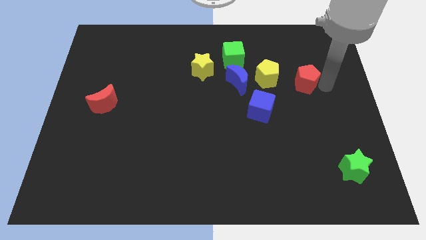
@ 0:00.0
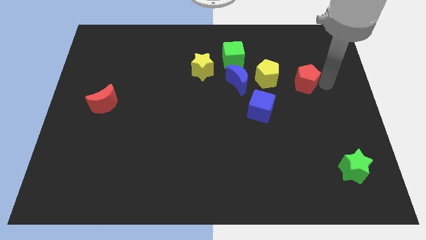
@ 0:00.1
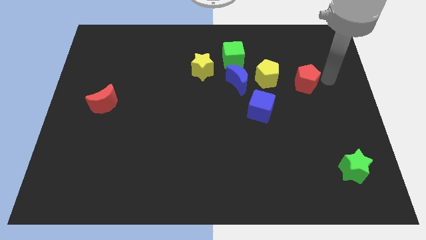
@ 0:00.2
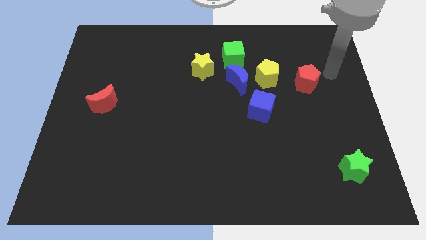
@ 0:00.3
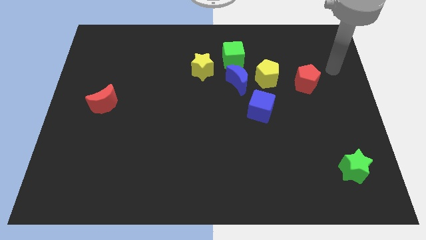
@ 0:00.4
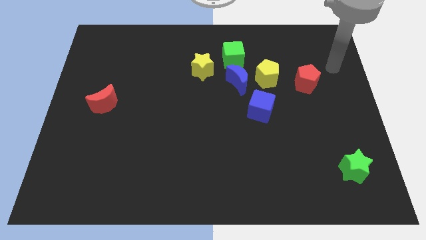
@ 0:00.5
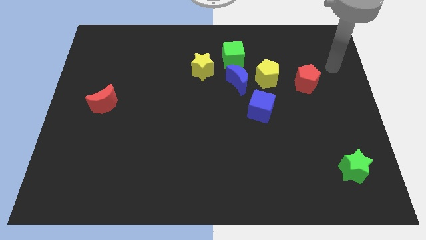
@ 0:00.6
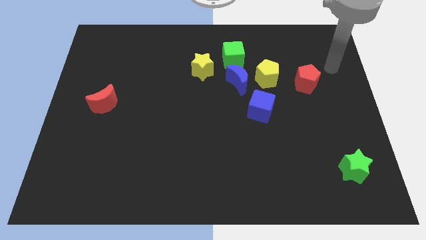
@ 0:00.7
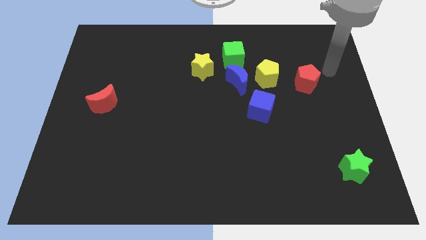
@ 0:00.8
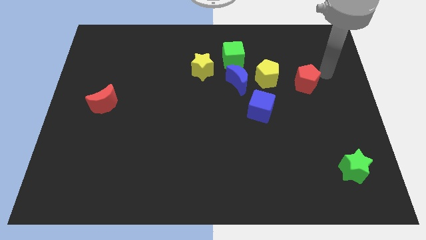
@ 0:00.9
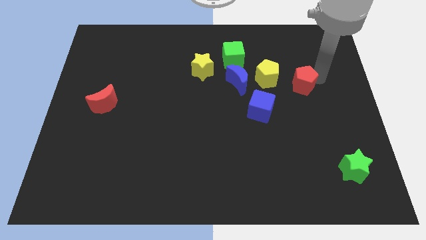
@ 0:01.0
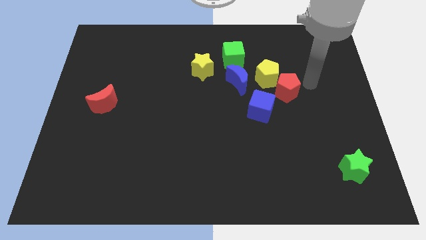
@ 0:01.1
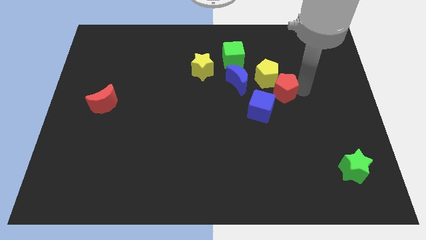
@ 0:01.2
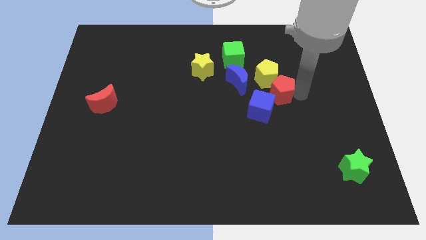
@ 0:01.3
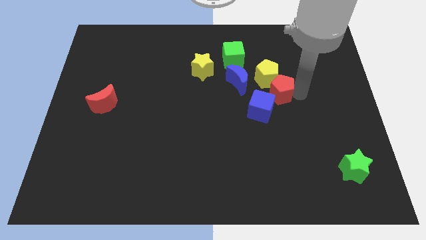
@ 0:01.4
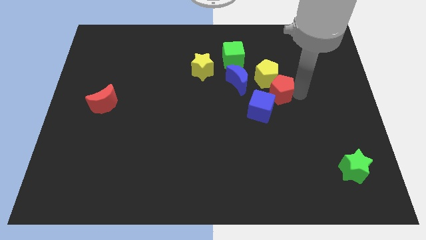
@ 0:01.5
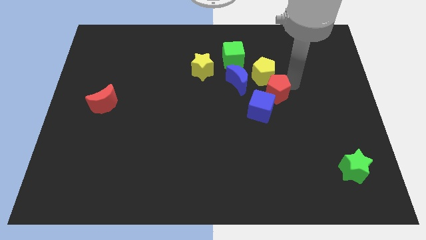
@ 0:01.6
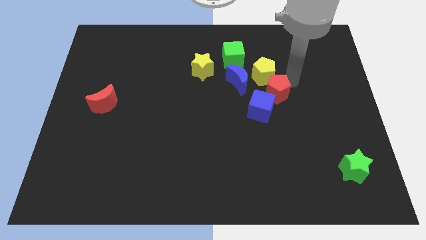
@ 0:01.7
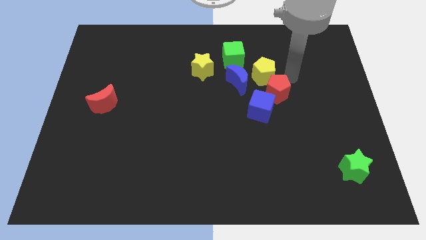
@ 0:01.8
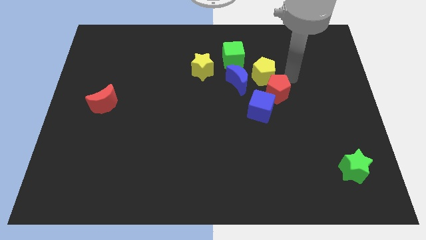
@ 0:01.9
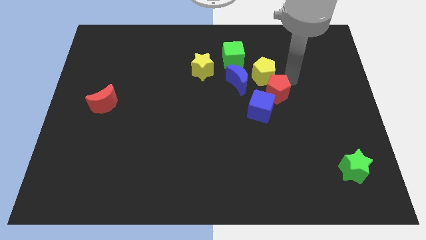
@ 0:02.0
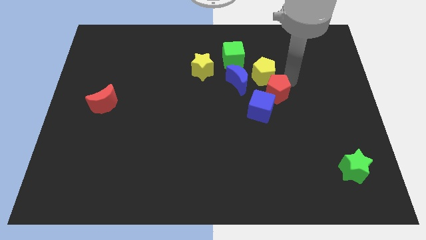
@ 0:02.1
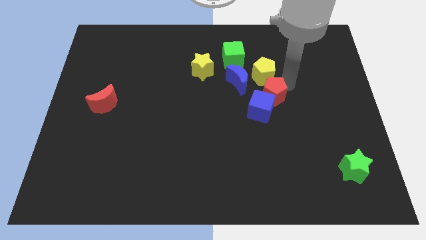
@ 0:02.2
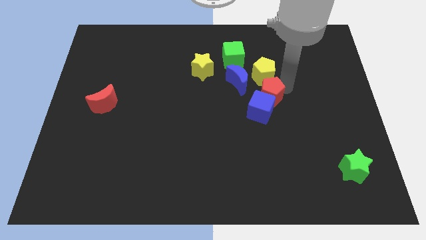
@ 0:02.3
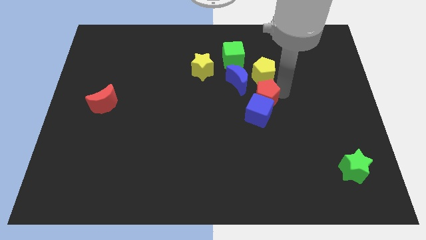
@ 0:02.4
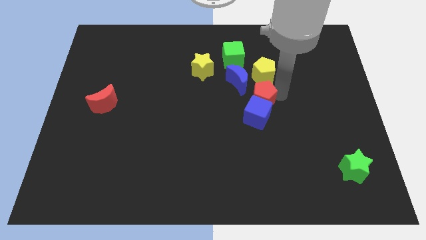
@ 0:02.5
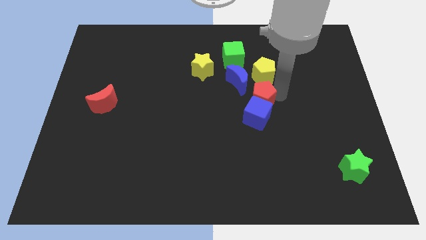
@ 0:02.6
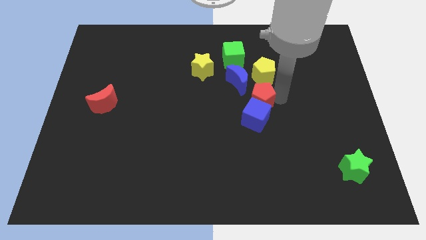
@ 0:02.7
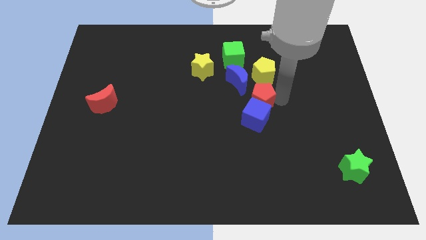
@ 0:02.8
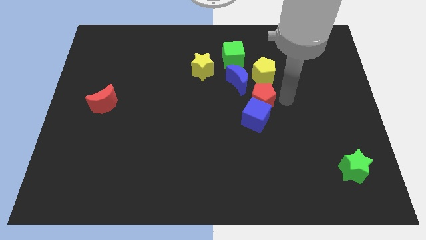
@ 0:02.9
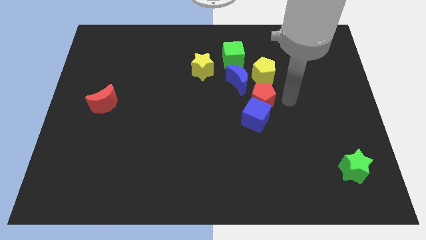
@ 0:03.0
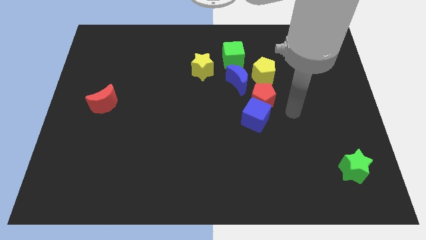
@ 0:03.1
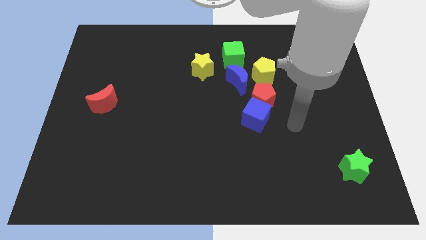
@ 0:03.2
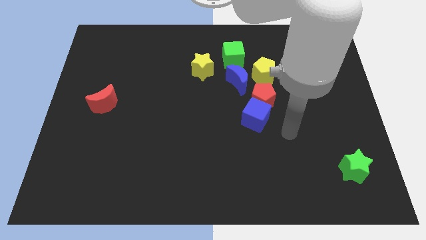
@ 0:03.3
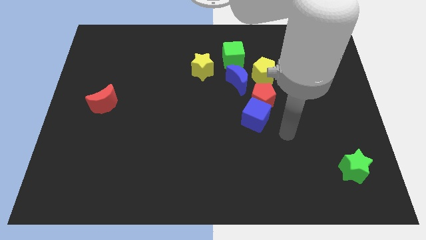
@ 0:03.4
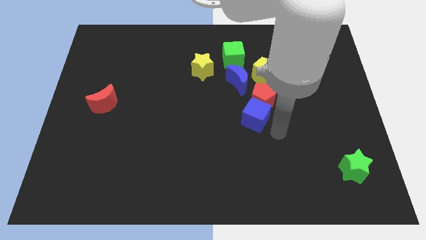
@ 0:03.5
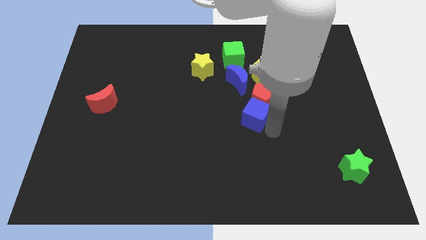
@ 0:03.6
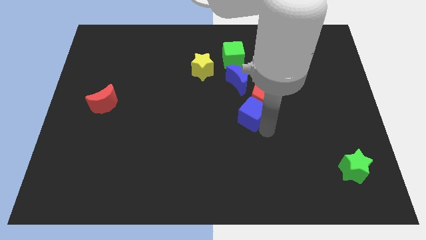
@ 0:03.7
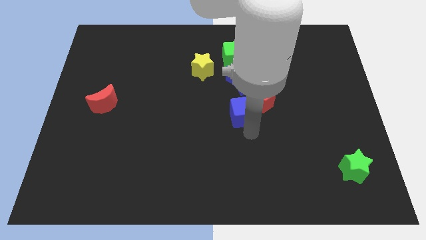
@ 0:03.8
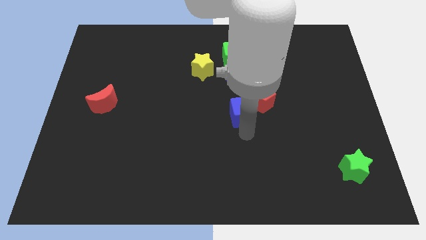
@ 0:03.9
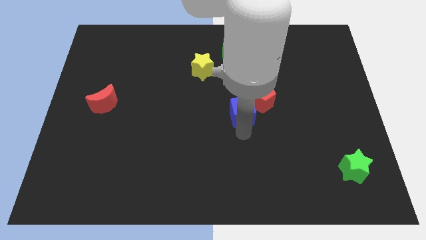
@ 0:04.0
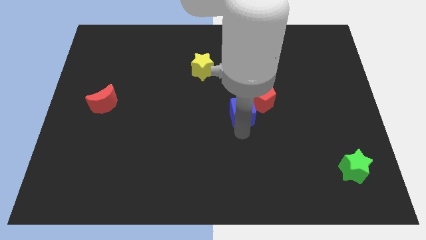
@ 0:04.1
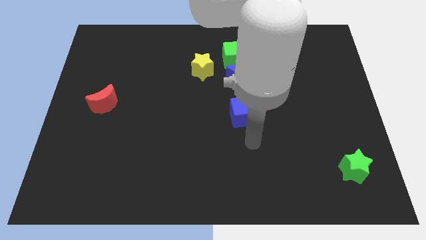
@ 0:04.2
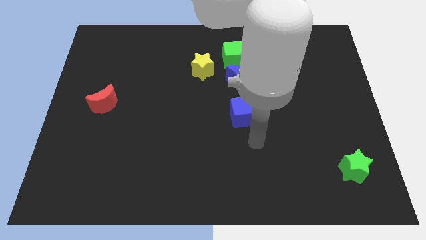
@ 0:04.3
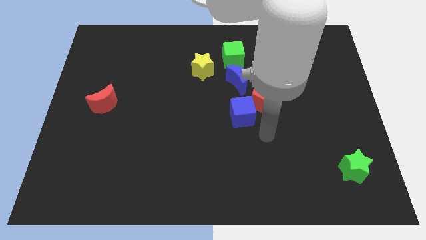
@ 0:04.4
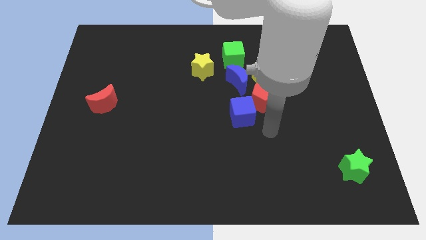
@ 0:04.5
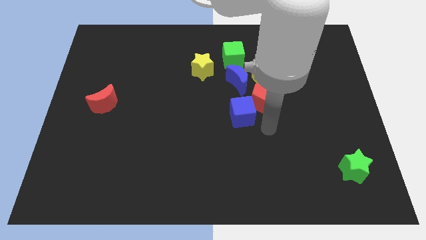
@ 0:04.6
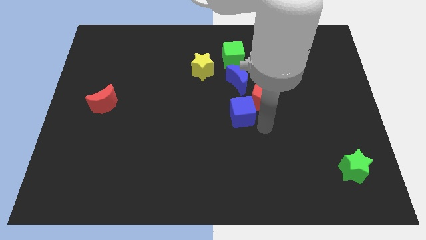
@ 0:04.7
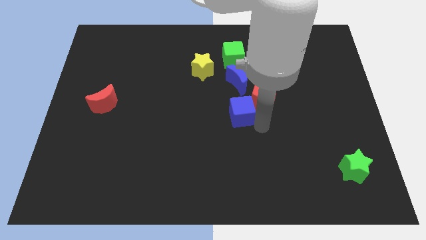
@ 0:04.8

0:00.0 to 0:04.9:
push the red pentagon into the blue cube

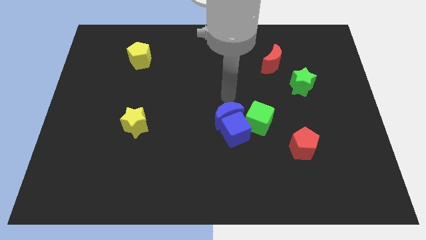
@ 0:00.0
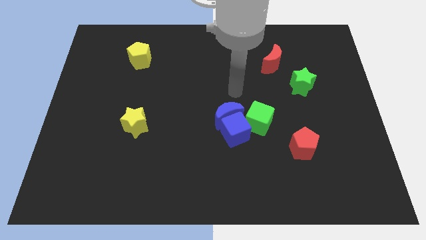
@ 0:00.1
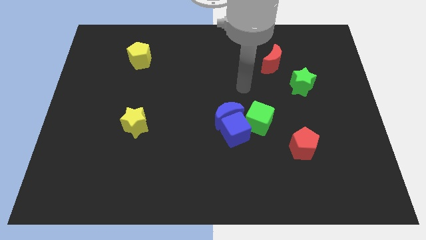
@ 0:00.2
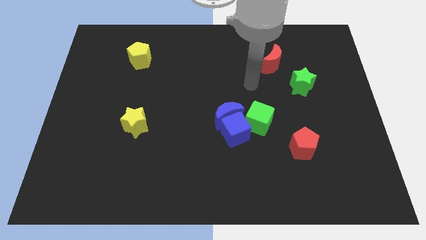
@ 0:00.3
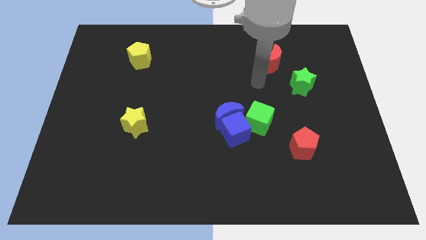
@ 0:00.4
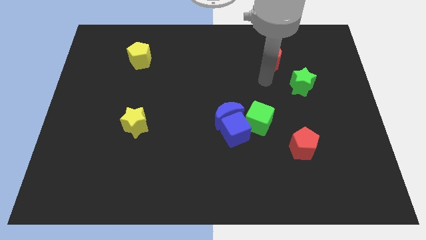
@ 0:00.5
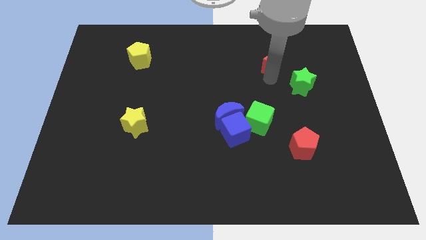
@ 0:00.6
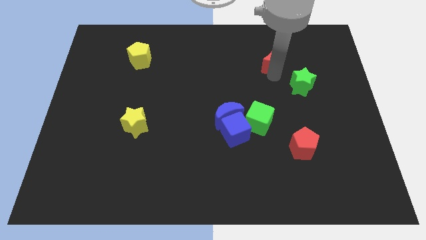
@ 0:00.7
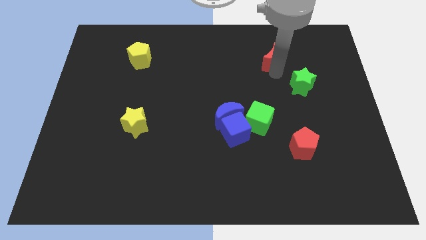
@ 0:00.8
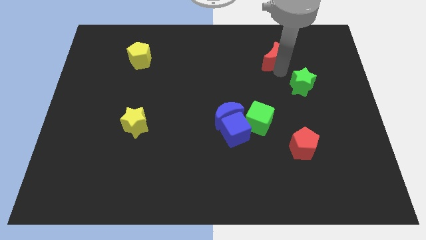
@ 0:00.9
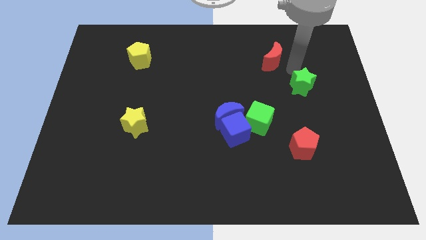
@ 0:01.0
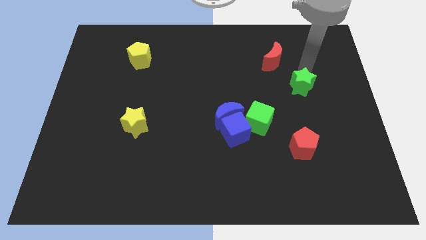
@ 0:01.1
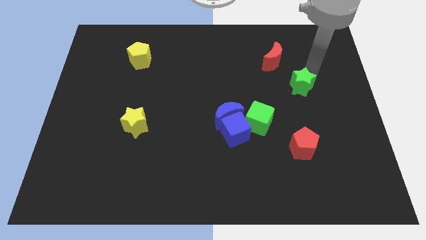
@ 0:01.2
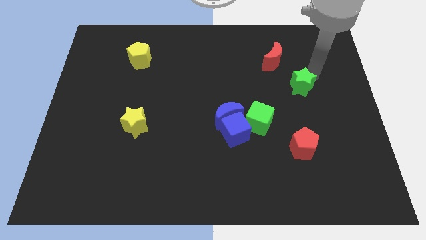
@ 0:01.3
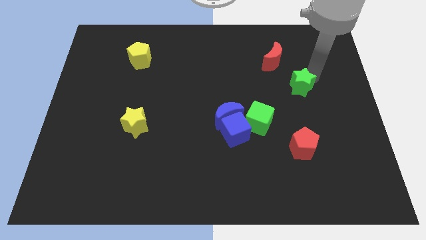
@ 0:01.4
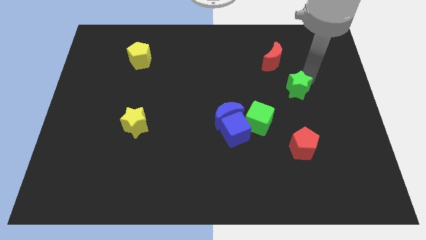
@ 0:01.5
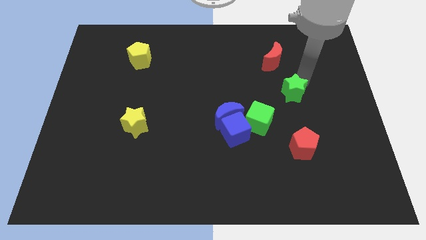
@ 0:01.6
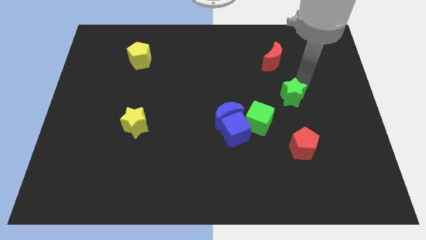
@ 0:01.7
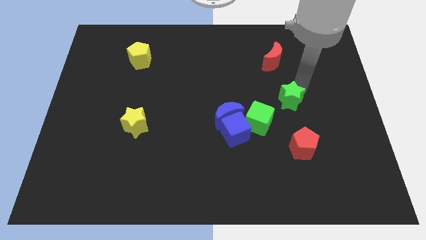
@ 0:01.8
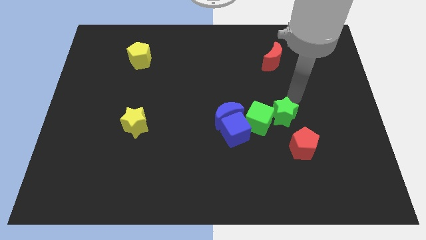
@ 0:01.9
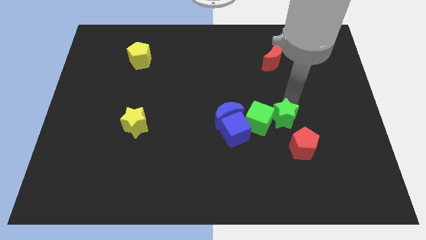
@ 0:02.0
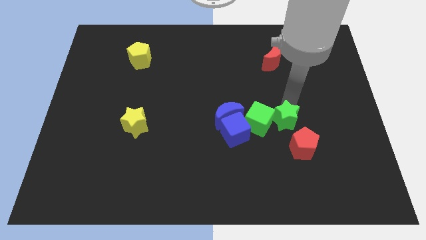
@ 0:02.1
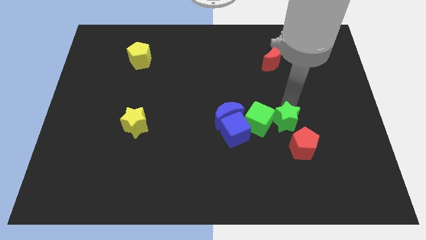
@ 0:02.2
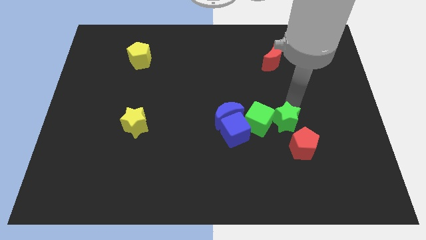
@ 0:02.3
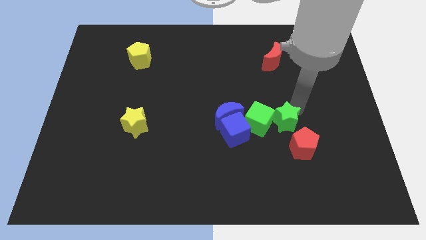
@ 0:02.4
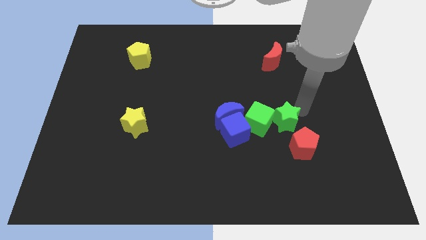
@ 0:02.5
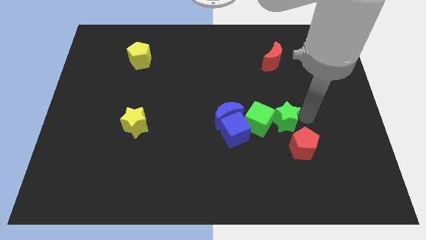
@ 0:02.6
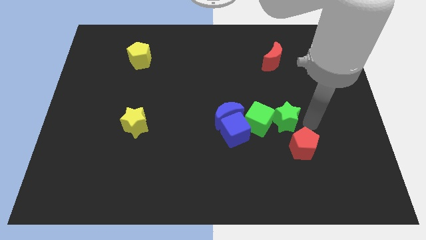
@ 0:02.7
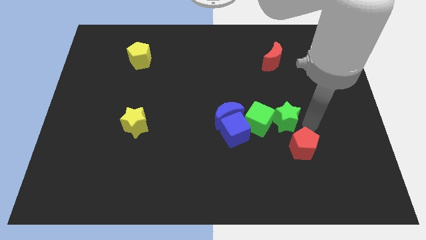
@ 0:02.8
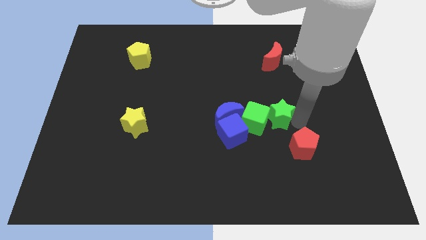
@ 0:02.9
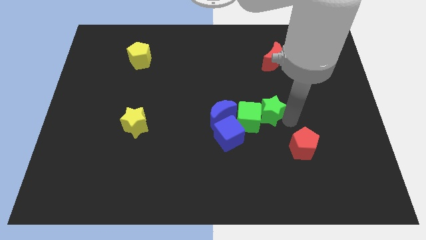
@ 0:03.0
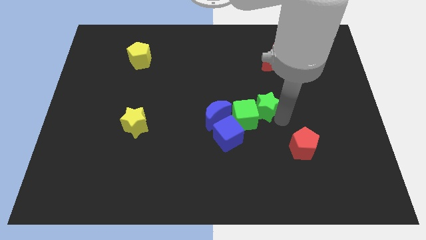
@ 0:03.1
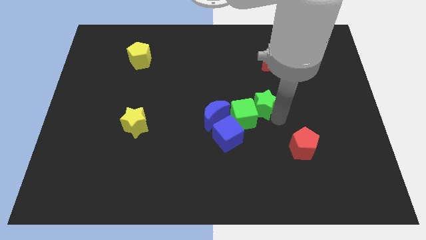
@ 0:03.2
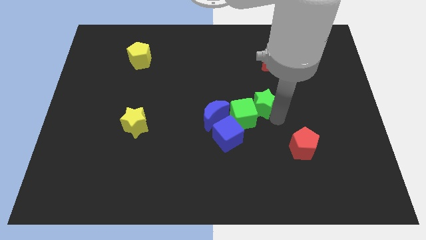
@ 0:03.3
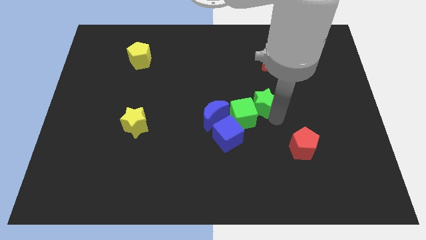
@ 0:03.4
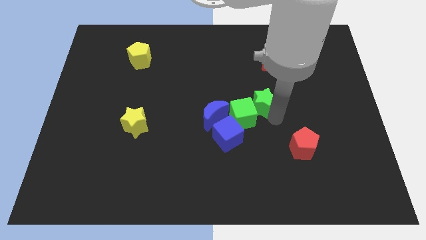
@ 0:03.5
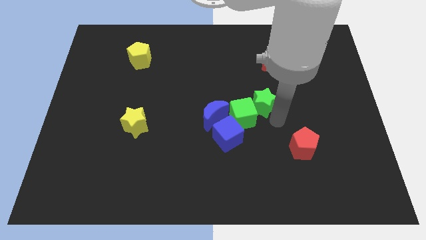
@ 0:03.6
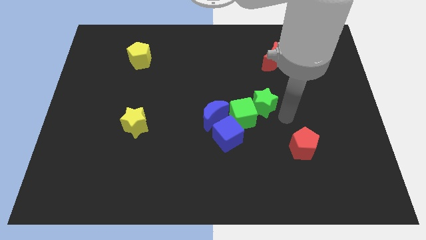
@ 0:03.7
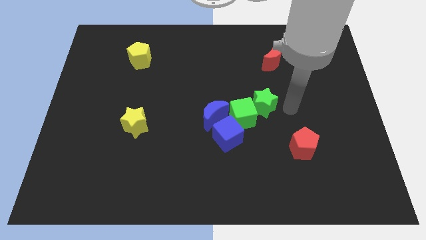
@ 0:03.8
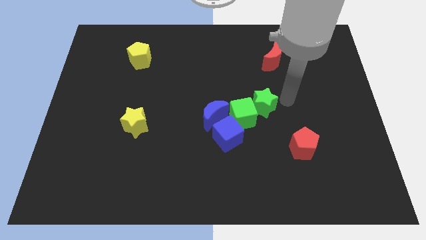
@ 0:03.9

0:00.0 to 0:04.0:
push the green blocks onto the blue blocks
